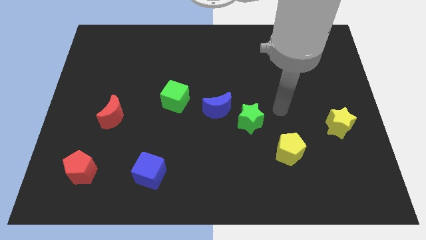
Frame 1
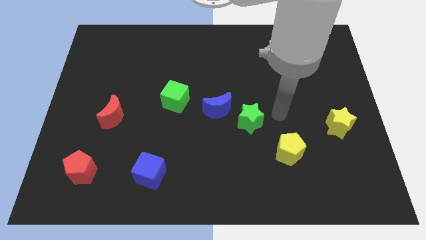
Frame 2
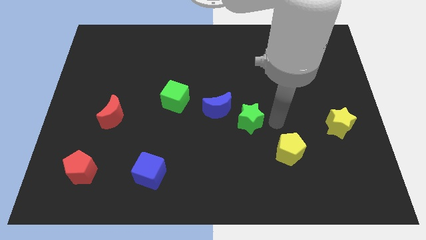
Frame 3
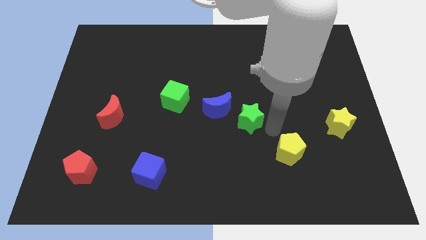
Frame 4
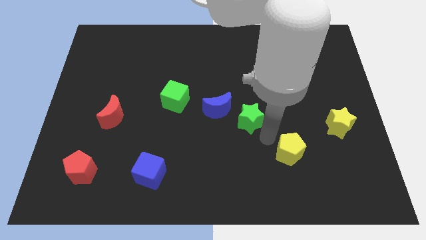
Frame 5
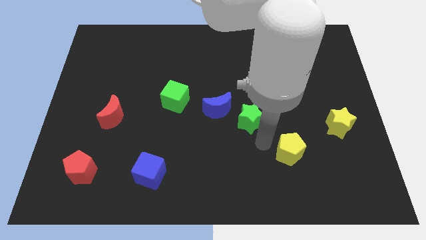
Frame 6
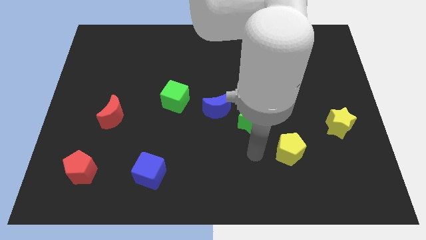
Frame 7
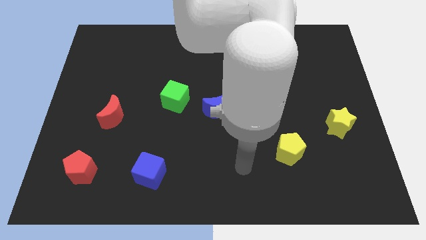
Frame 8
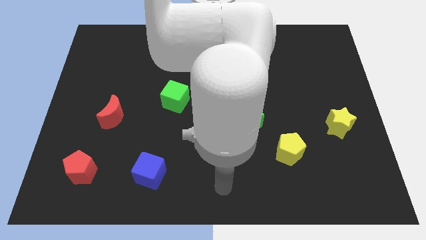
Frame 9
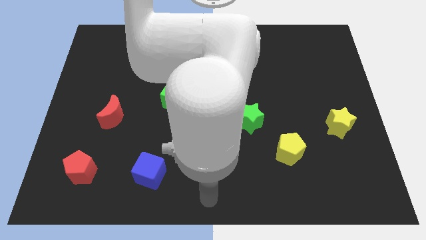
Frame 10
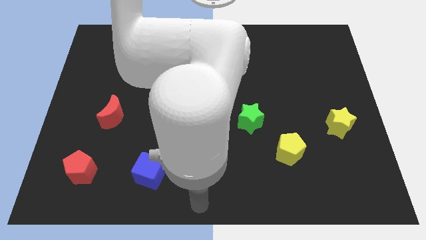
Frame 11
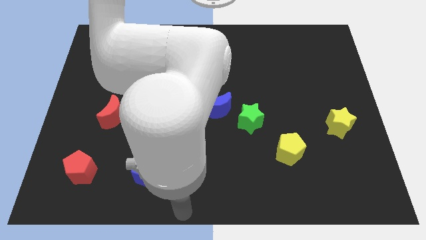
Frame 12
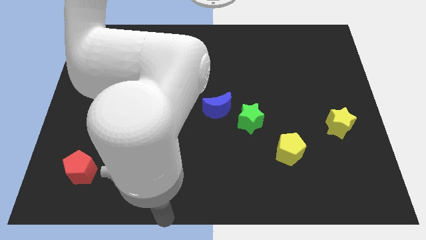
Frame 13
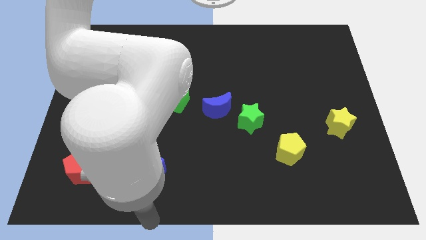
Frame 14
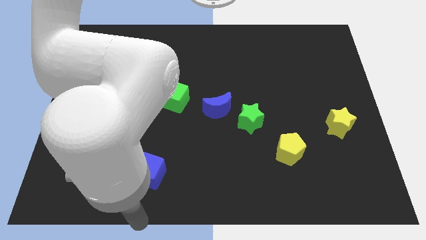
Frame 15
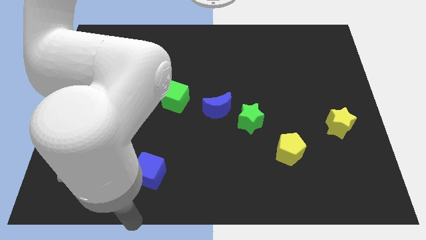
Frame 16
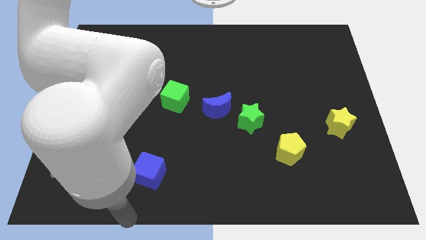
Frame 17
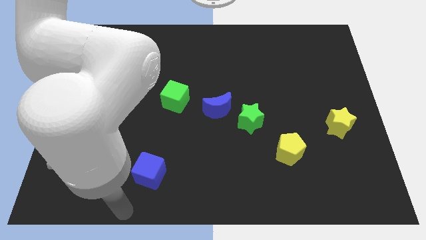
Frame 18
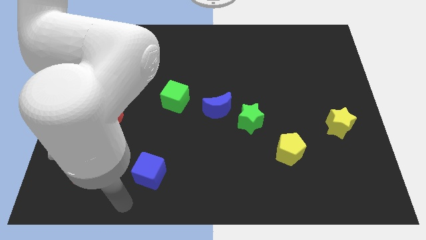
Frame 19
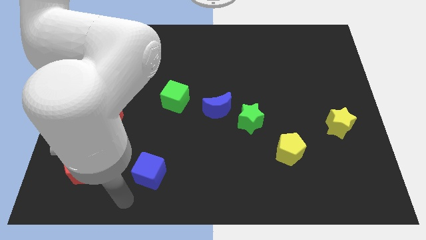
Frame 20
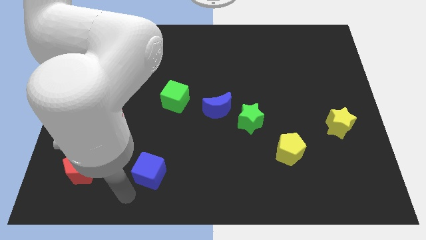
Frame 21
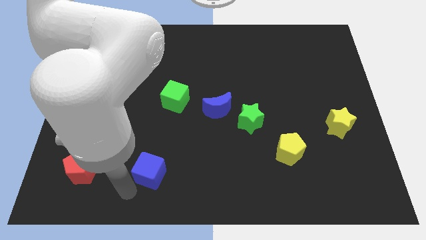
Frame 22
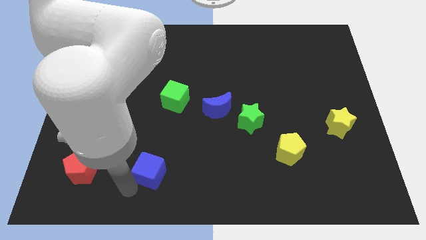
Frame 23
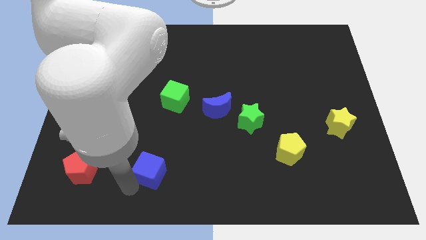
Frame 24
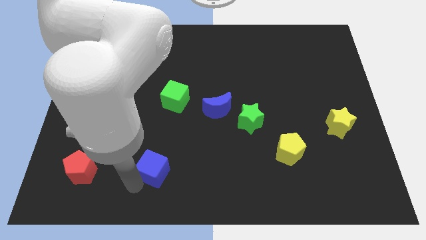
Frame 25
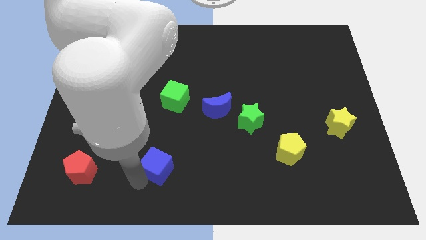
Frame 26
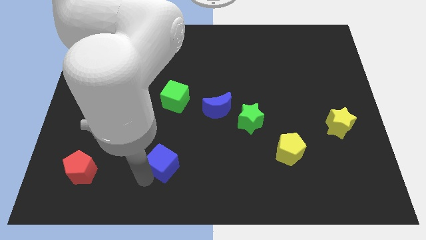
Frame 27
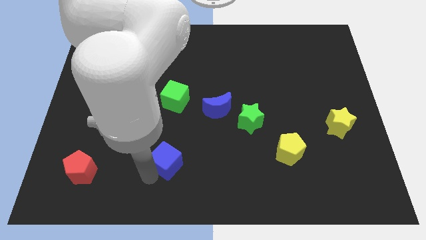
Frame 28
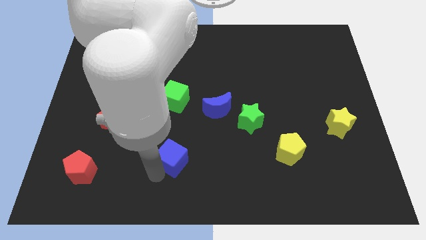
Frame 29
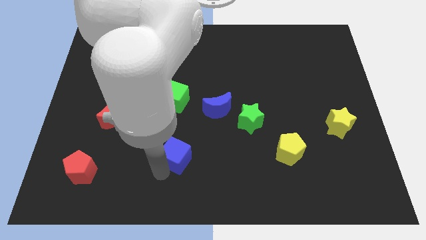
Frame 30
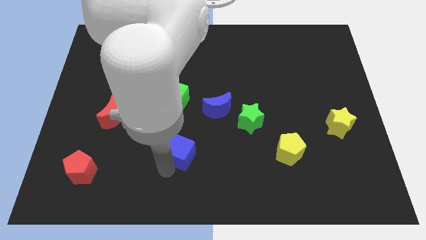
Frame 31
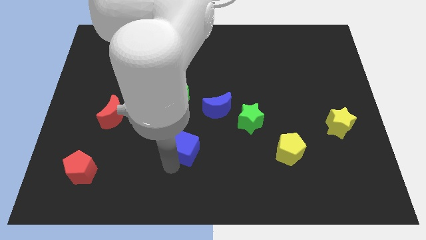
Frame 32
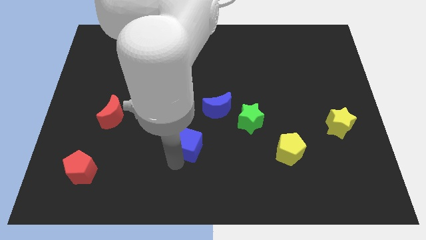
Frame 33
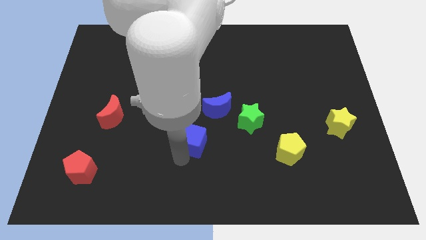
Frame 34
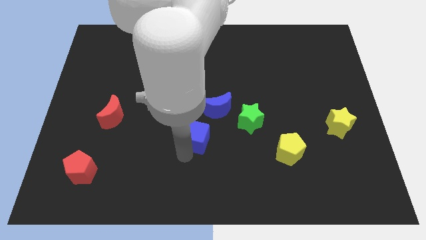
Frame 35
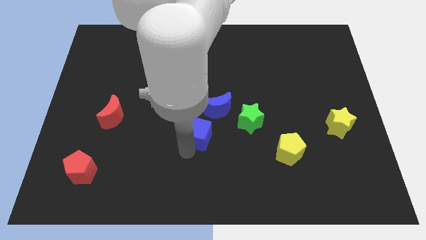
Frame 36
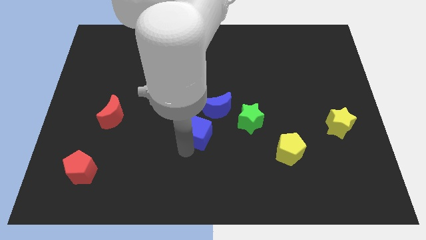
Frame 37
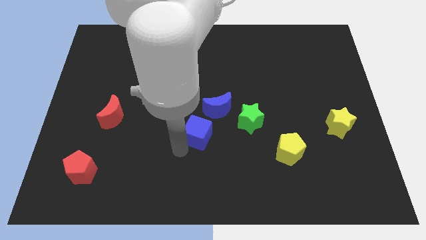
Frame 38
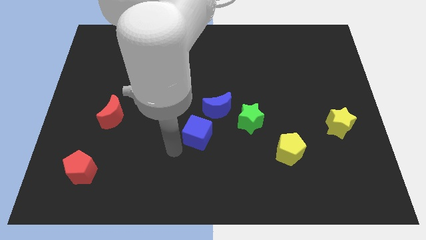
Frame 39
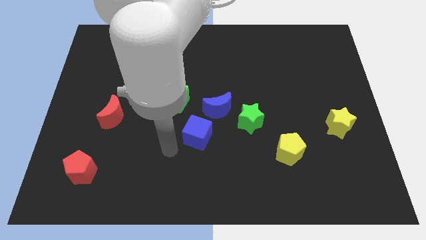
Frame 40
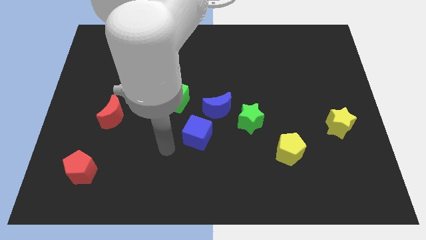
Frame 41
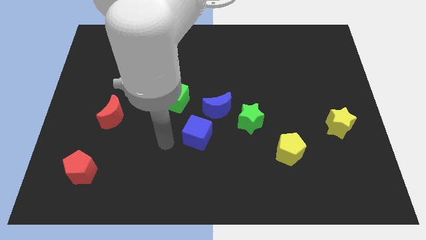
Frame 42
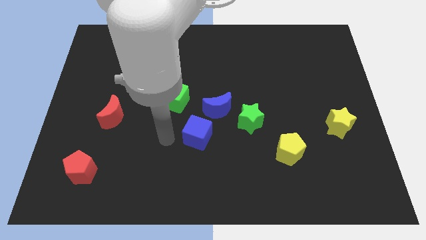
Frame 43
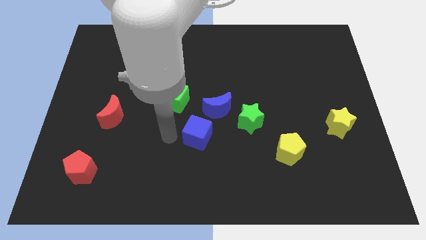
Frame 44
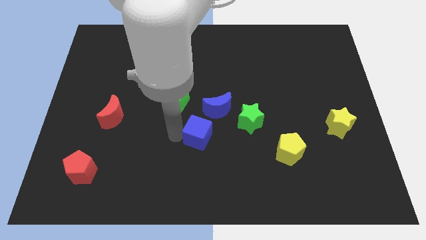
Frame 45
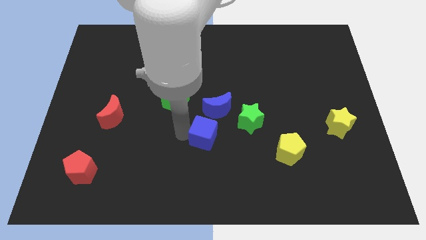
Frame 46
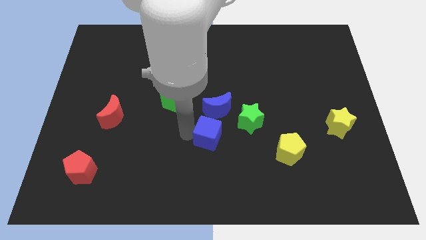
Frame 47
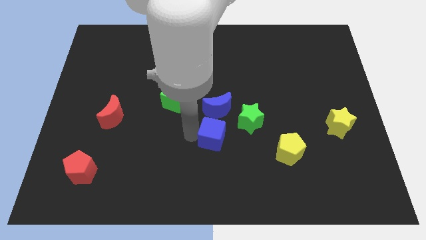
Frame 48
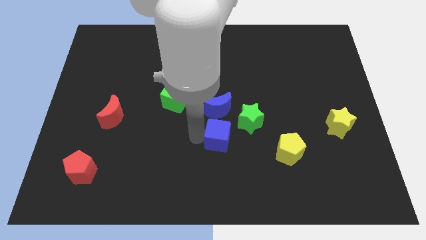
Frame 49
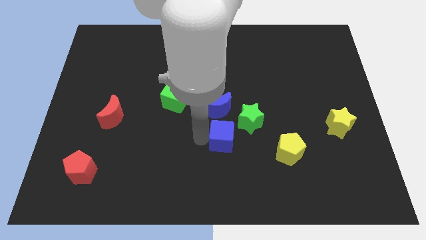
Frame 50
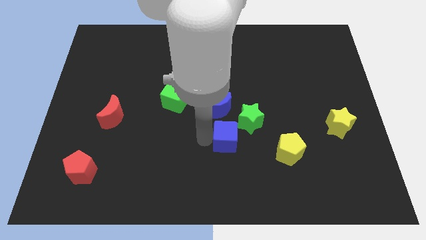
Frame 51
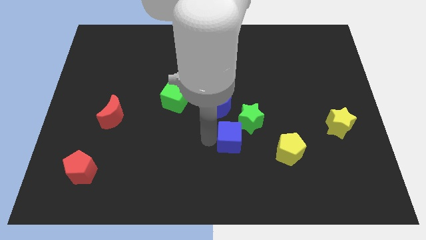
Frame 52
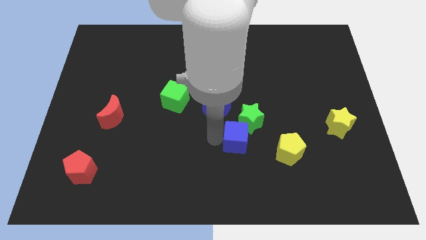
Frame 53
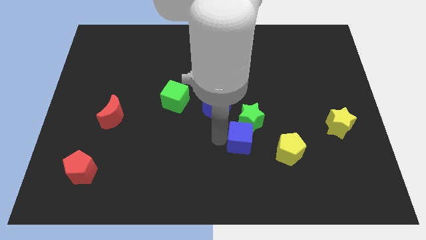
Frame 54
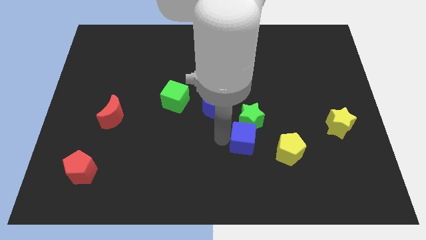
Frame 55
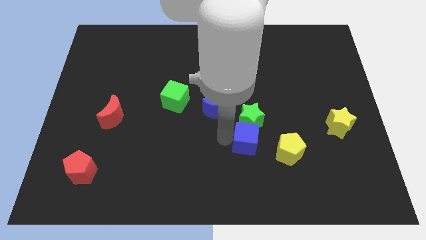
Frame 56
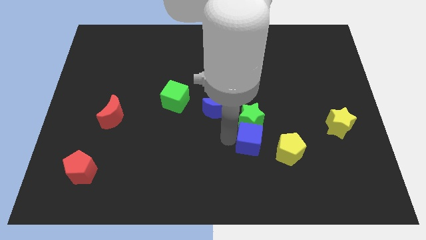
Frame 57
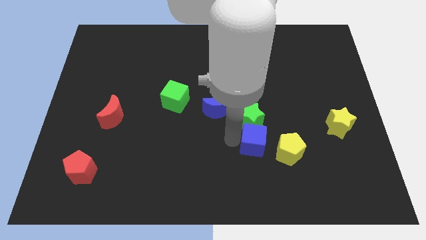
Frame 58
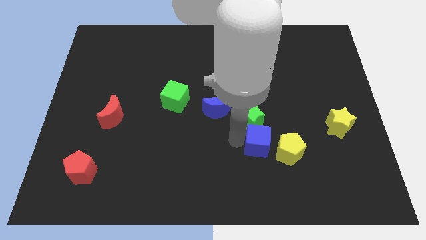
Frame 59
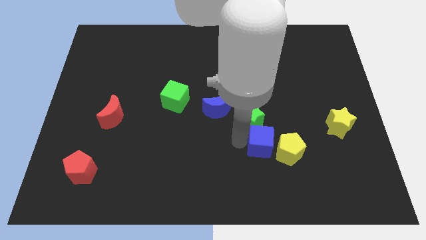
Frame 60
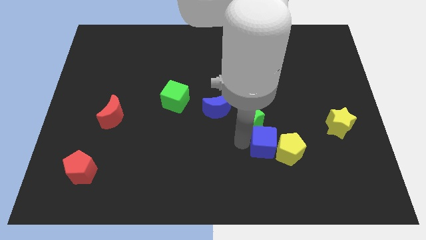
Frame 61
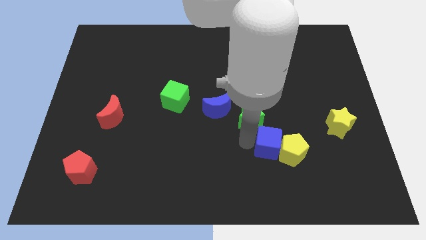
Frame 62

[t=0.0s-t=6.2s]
put the blue cube next to the yellow pentagon

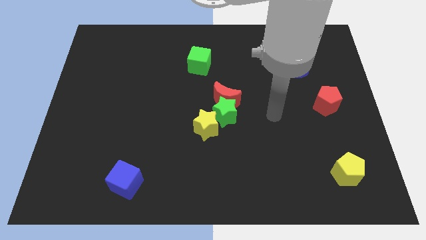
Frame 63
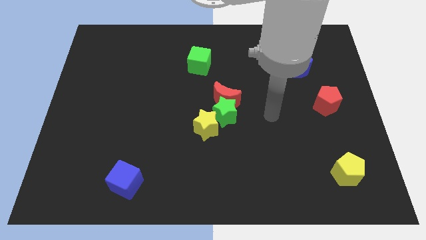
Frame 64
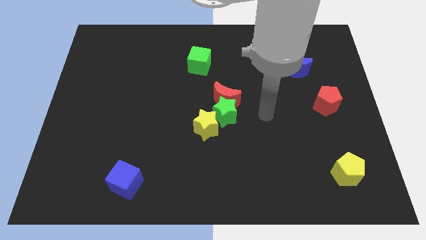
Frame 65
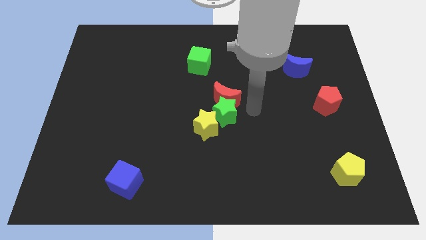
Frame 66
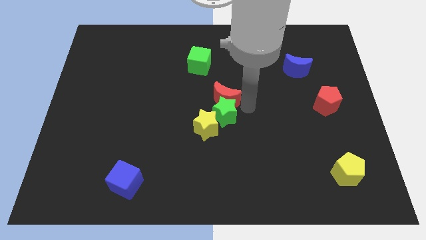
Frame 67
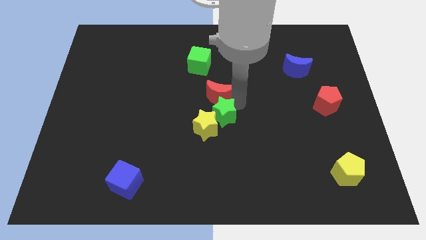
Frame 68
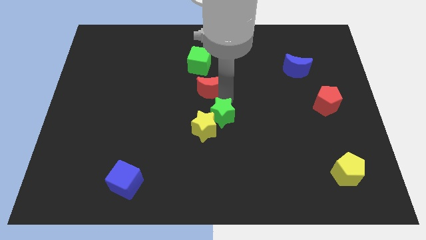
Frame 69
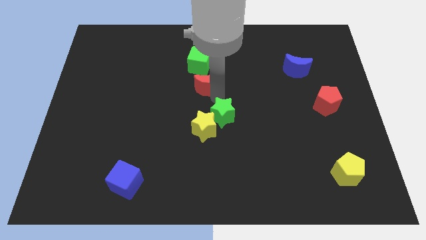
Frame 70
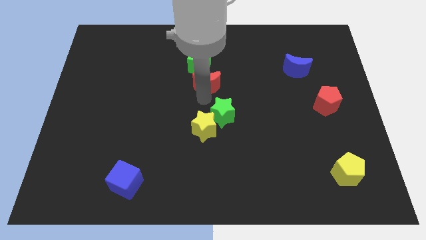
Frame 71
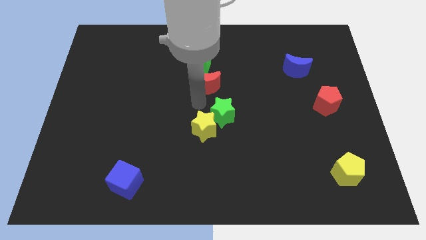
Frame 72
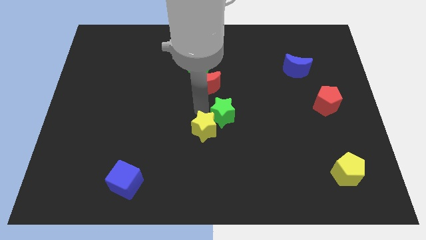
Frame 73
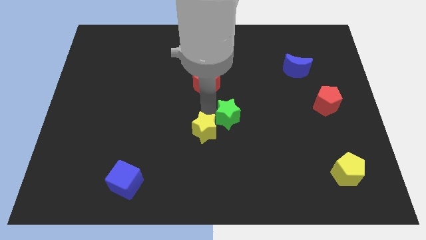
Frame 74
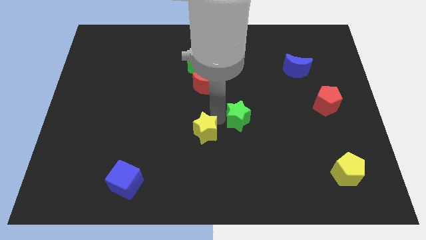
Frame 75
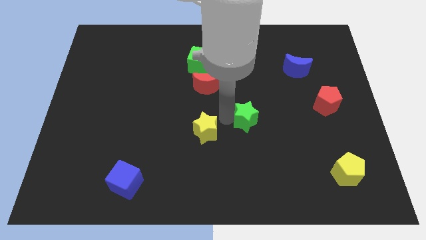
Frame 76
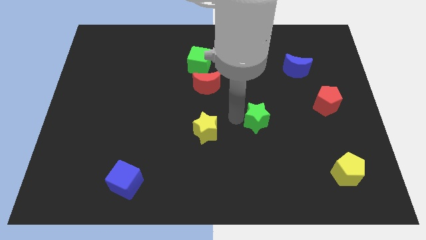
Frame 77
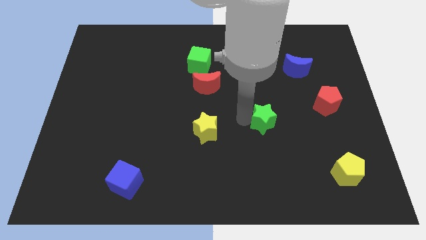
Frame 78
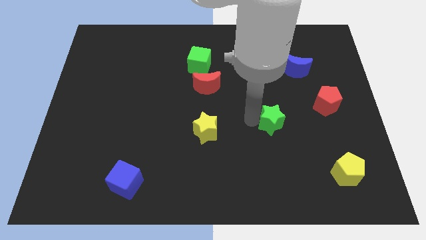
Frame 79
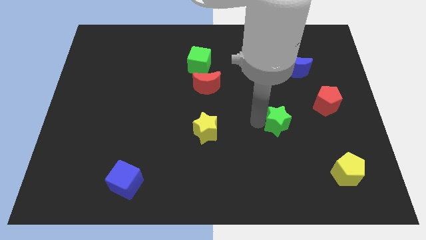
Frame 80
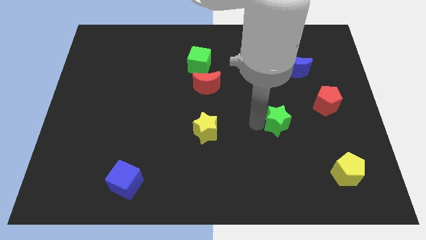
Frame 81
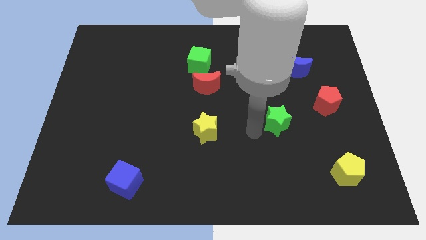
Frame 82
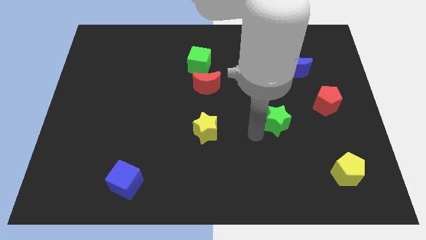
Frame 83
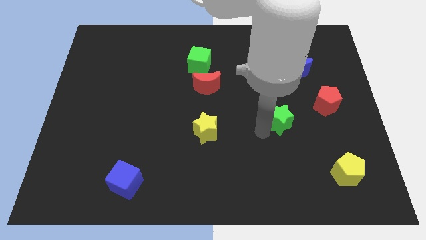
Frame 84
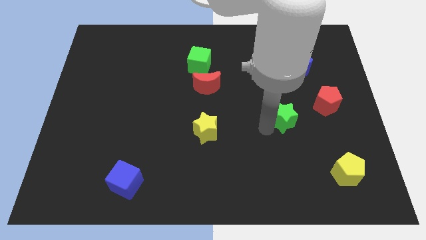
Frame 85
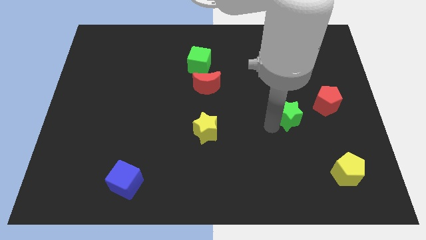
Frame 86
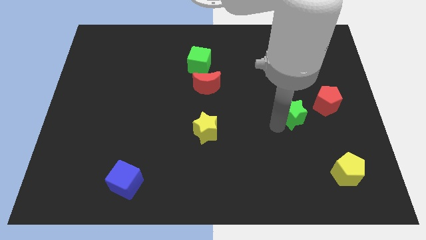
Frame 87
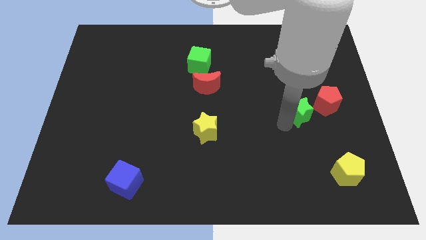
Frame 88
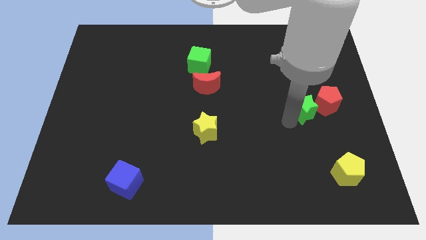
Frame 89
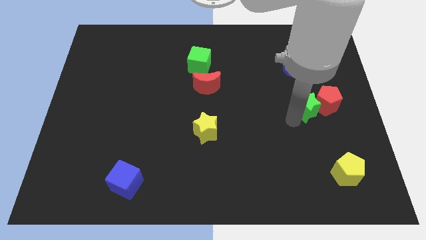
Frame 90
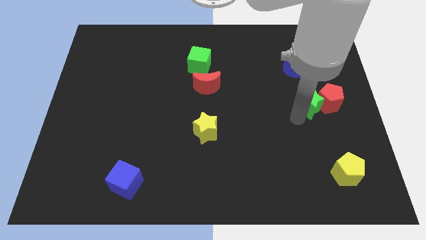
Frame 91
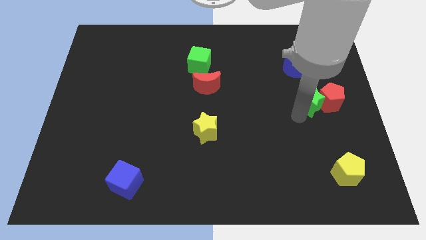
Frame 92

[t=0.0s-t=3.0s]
put the green star to the red pentagon
